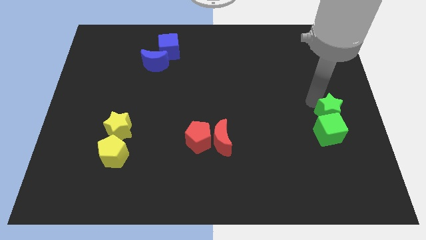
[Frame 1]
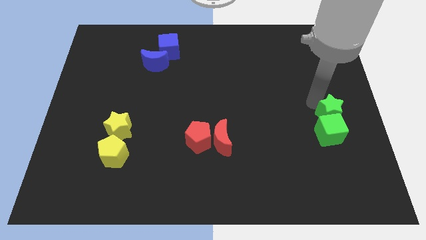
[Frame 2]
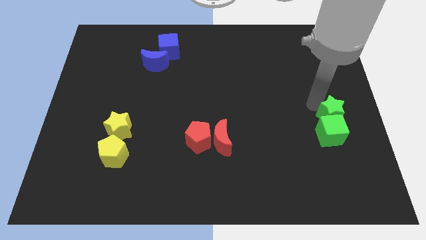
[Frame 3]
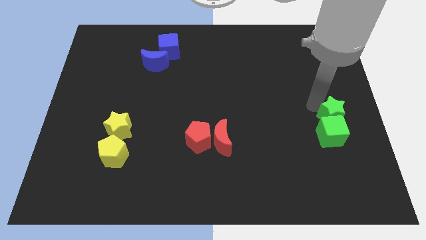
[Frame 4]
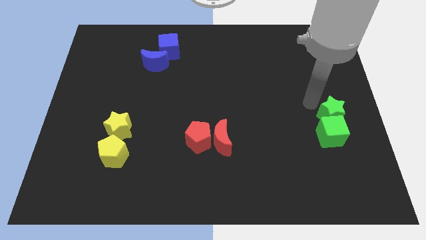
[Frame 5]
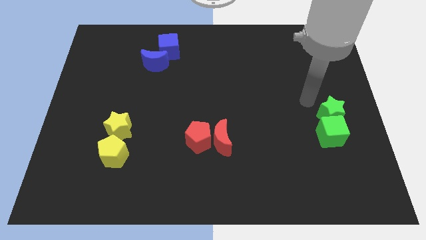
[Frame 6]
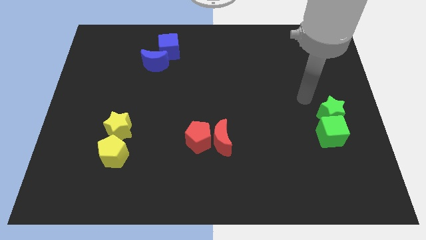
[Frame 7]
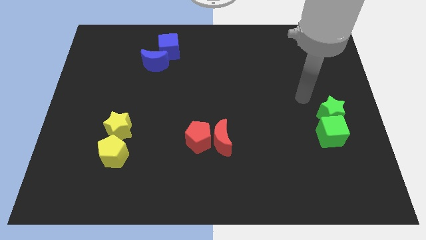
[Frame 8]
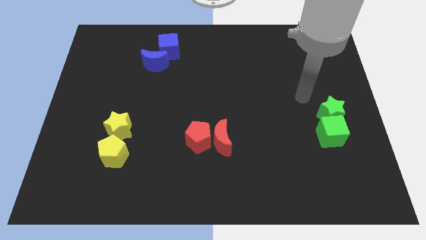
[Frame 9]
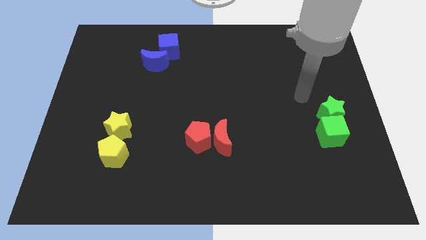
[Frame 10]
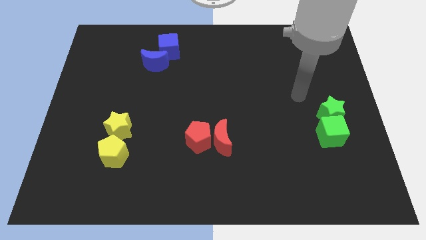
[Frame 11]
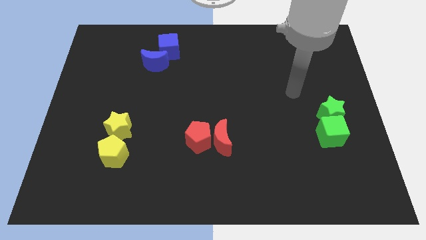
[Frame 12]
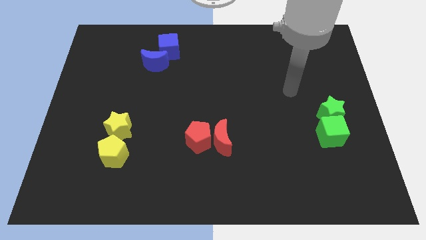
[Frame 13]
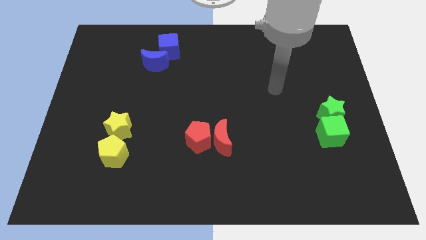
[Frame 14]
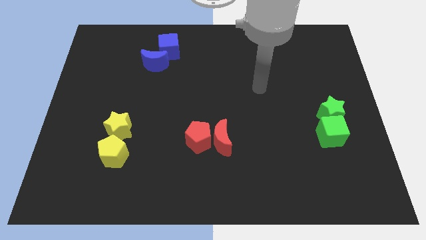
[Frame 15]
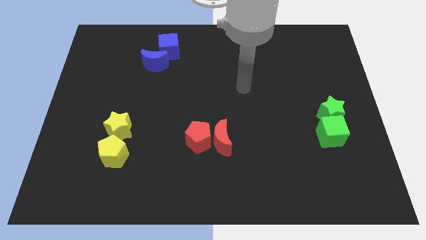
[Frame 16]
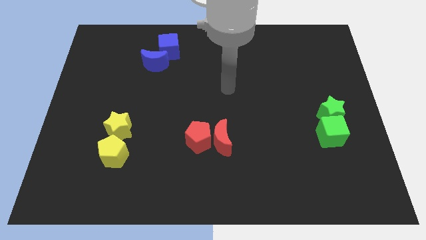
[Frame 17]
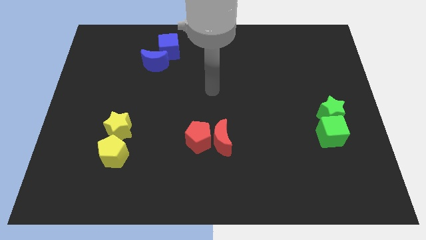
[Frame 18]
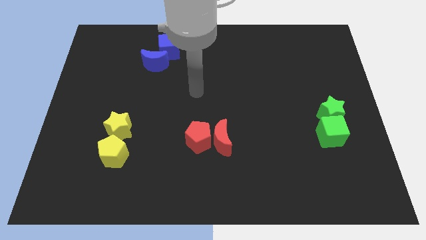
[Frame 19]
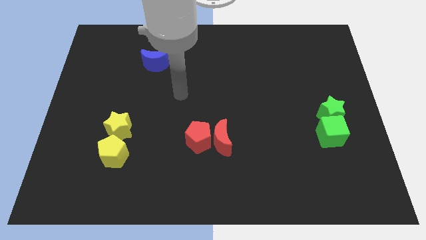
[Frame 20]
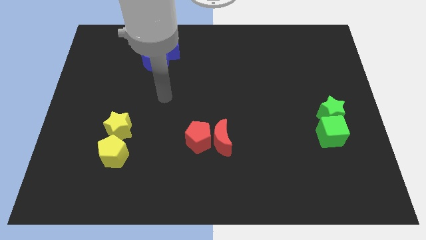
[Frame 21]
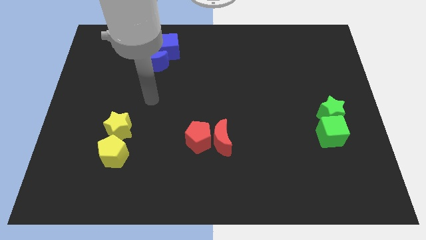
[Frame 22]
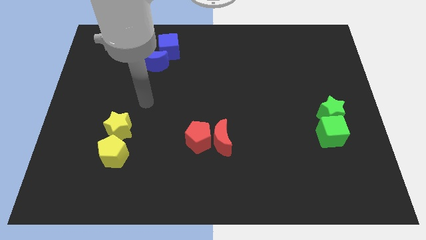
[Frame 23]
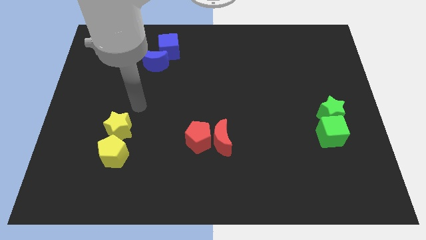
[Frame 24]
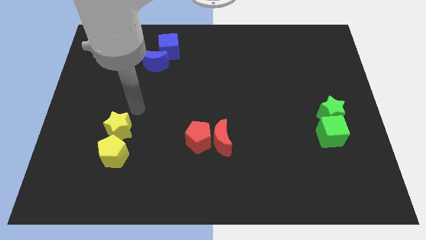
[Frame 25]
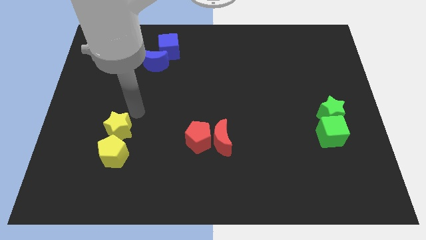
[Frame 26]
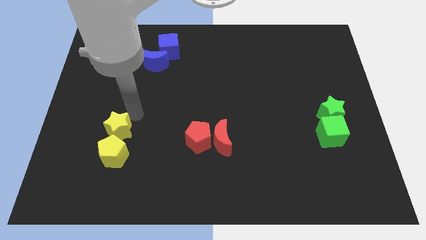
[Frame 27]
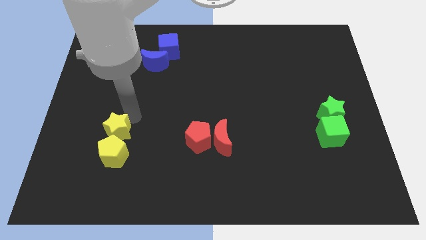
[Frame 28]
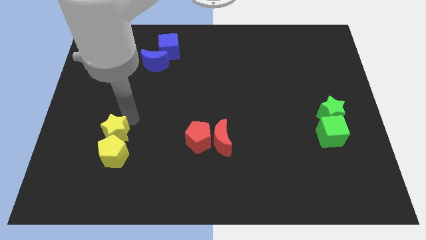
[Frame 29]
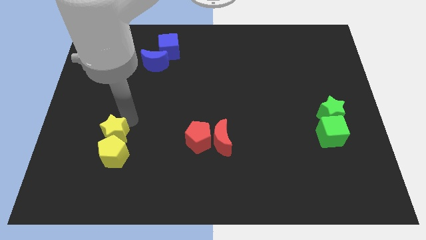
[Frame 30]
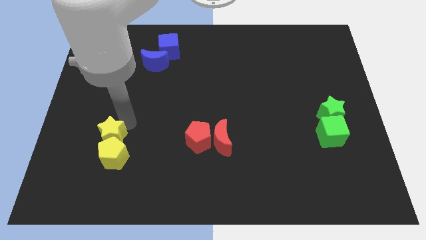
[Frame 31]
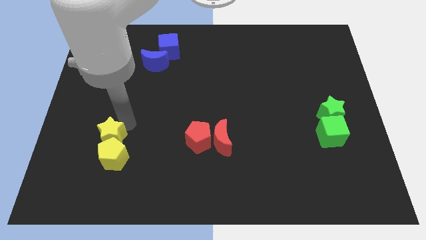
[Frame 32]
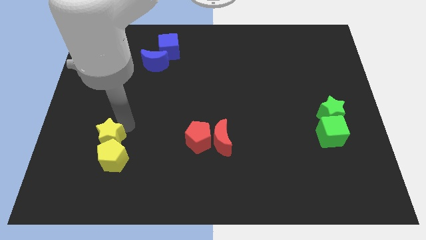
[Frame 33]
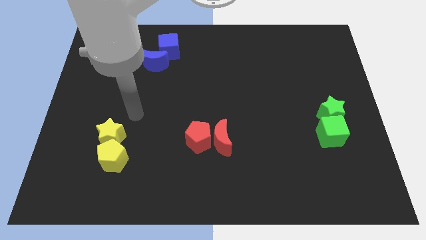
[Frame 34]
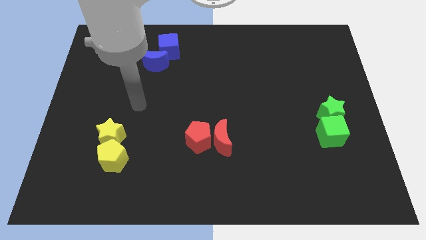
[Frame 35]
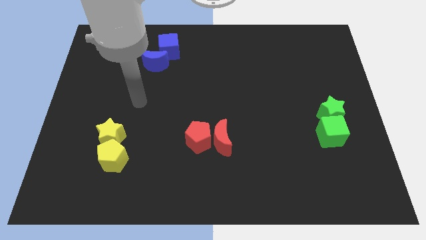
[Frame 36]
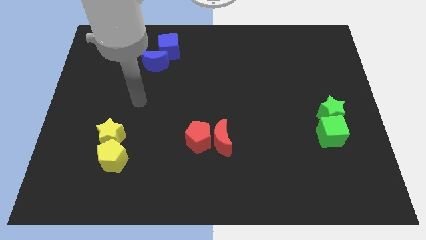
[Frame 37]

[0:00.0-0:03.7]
move yellow star into yellow pentagon

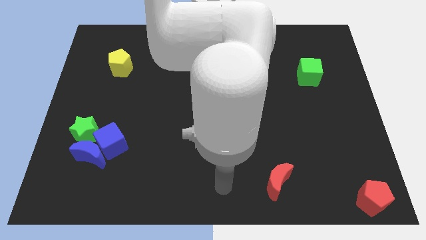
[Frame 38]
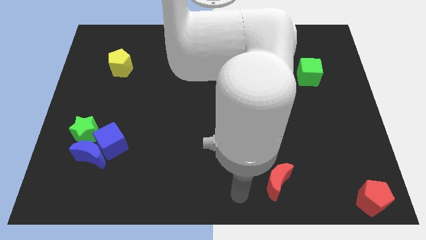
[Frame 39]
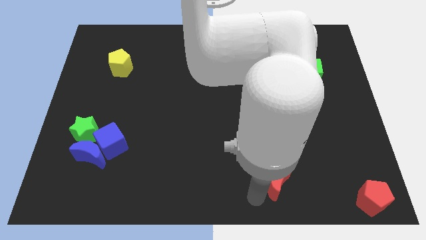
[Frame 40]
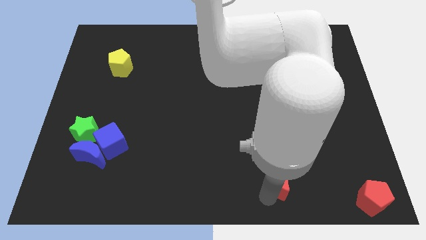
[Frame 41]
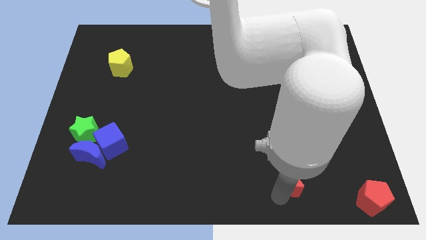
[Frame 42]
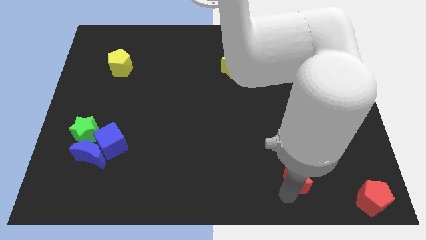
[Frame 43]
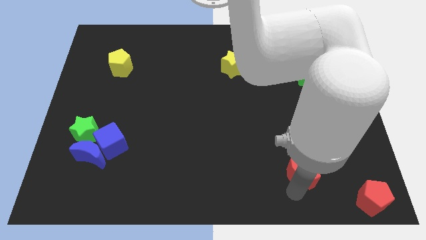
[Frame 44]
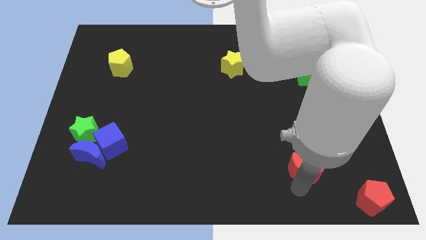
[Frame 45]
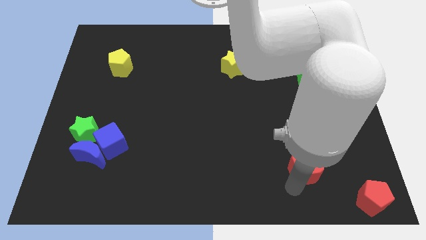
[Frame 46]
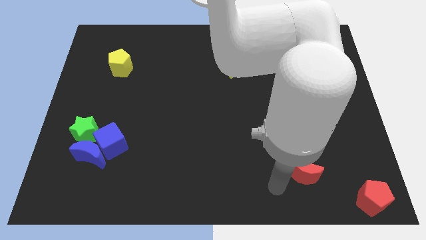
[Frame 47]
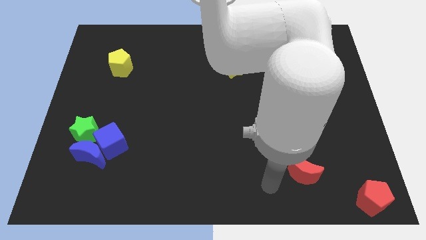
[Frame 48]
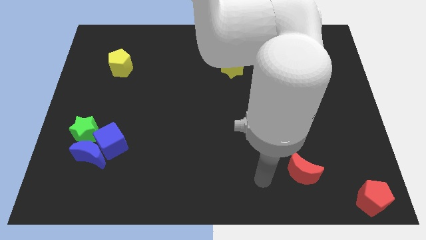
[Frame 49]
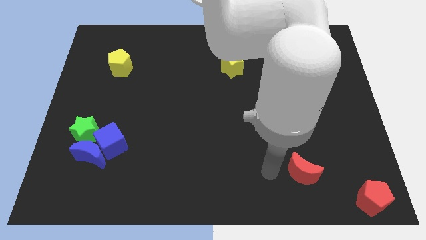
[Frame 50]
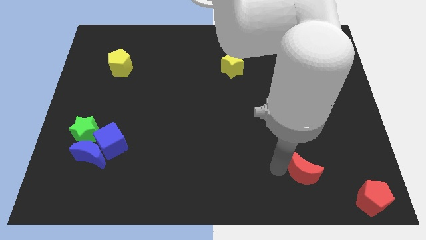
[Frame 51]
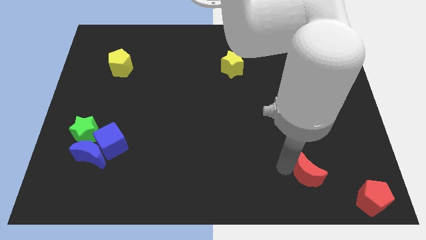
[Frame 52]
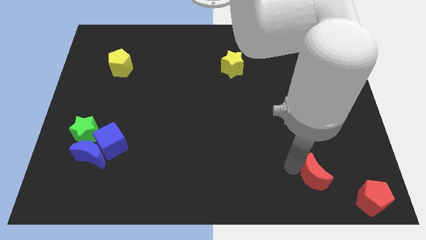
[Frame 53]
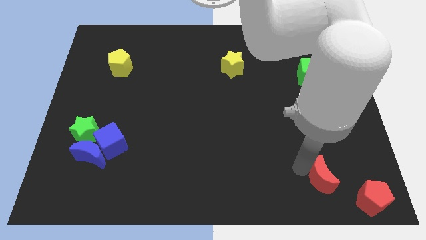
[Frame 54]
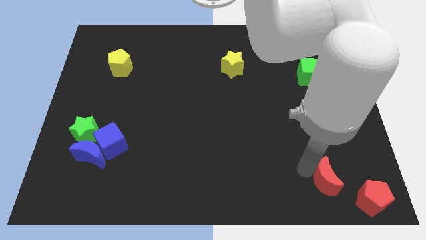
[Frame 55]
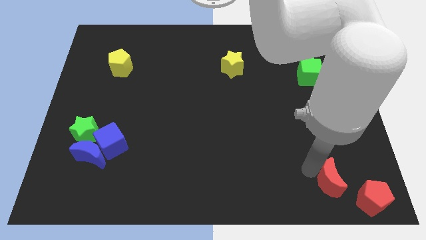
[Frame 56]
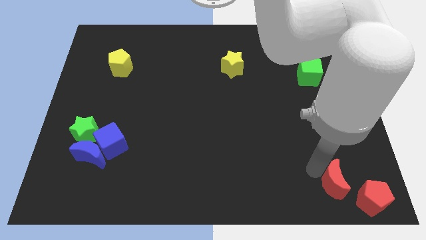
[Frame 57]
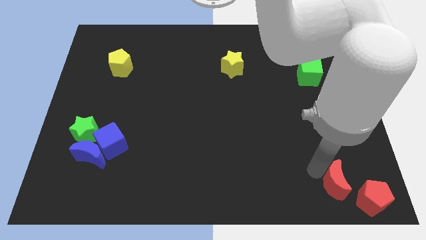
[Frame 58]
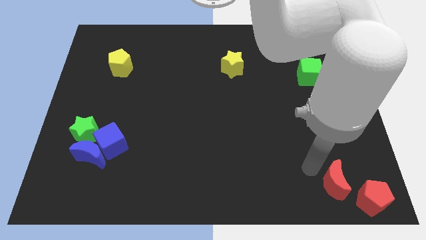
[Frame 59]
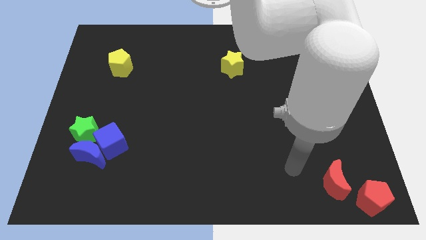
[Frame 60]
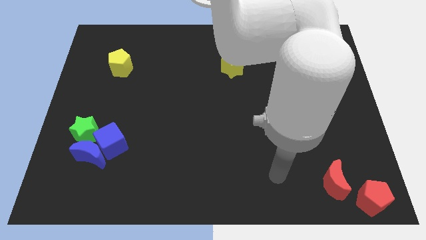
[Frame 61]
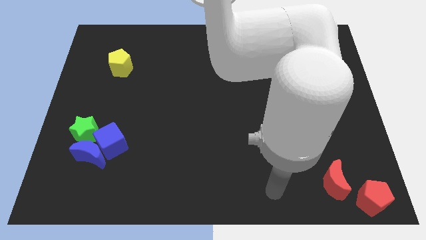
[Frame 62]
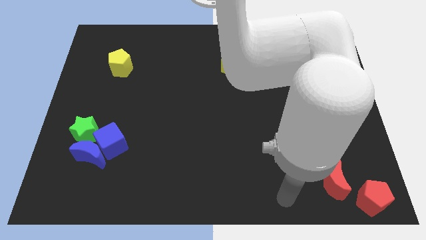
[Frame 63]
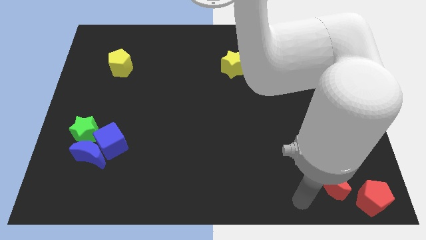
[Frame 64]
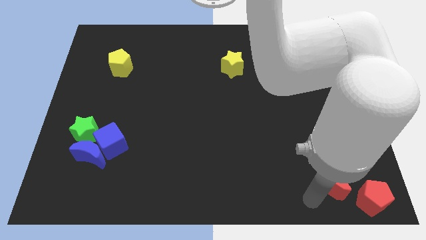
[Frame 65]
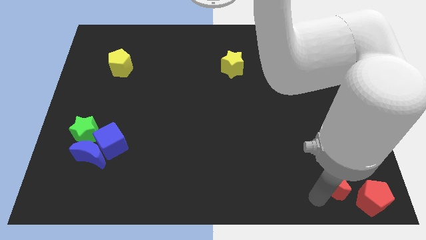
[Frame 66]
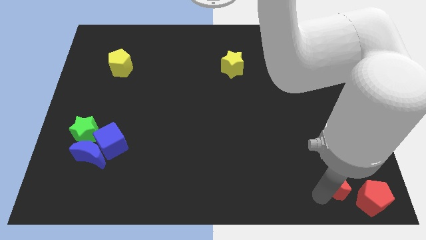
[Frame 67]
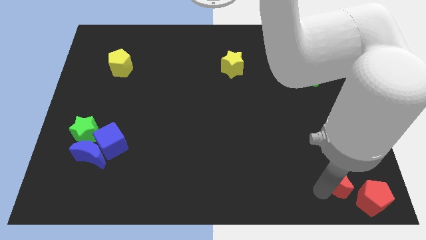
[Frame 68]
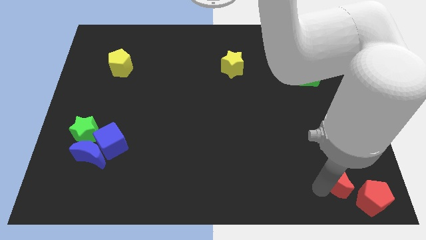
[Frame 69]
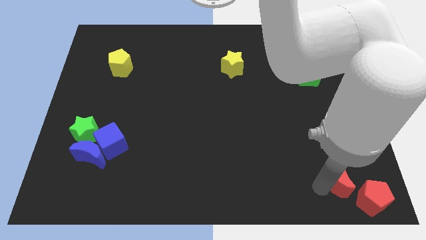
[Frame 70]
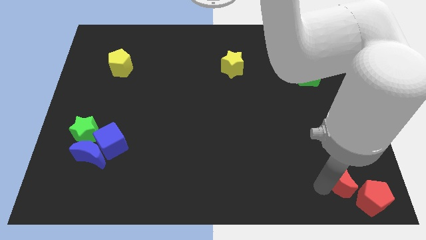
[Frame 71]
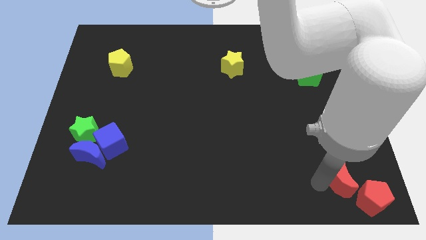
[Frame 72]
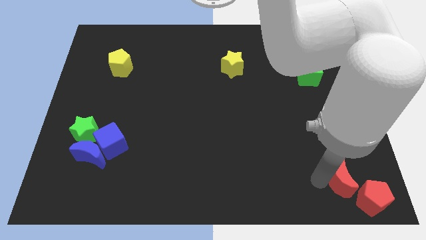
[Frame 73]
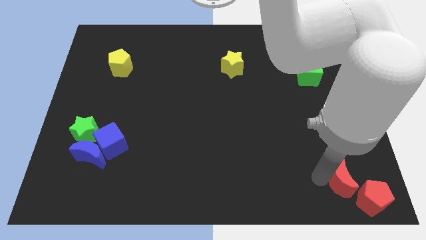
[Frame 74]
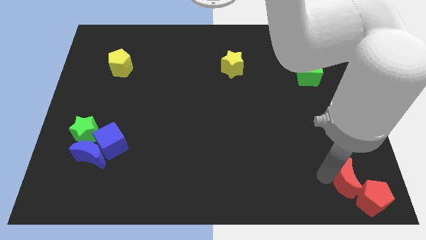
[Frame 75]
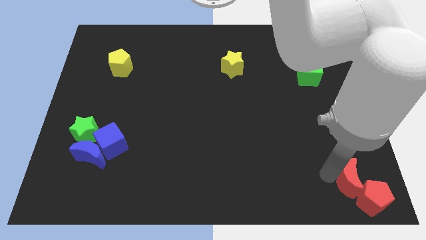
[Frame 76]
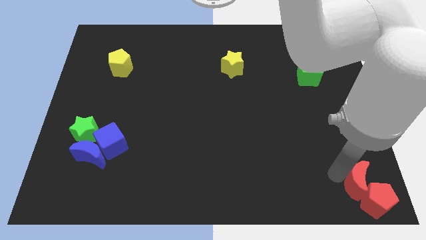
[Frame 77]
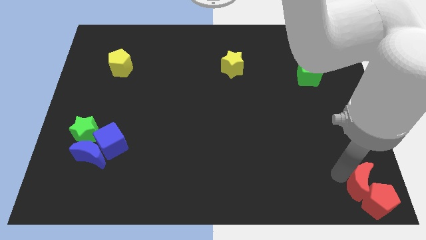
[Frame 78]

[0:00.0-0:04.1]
push red moon into red pentagon

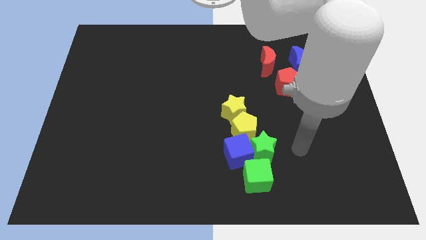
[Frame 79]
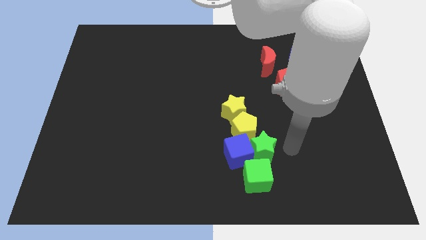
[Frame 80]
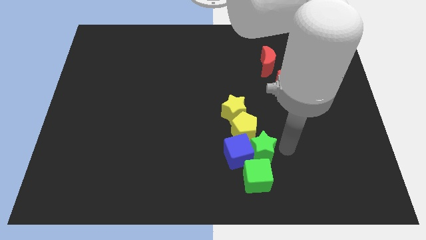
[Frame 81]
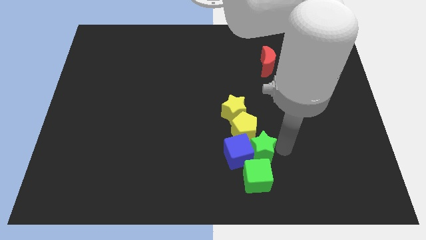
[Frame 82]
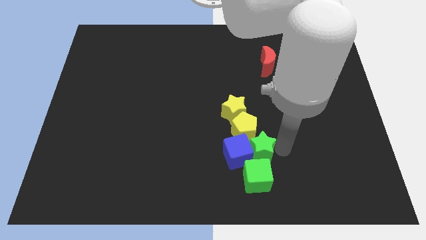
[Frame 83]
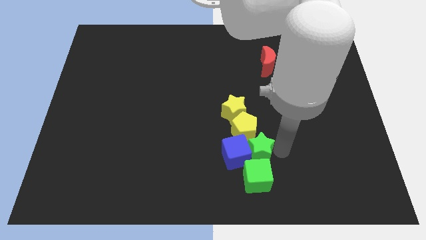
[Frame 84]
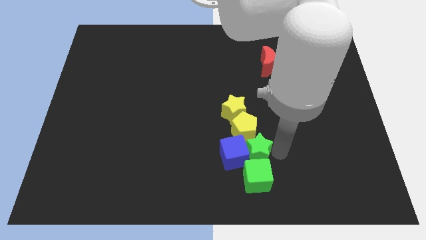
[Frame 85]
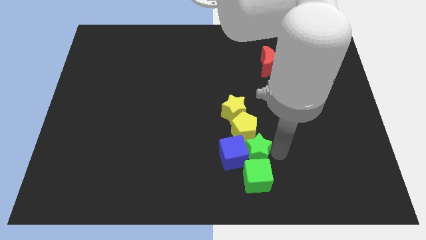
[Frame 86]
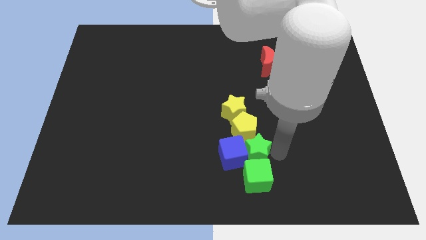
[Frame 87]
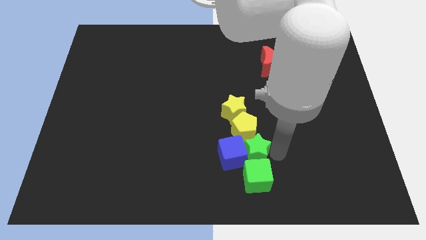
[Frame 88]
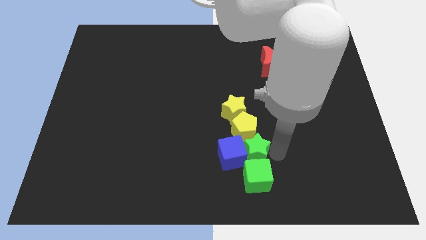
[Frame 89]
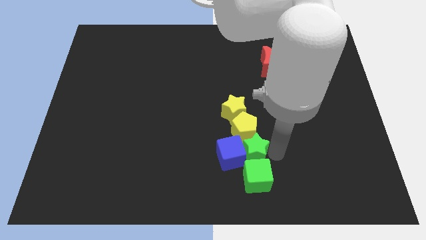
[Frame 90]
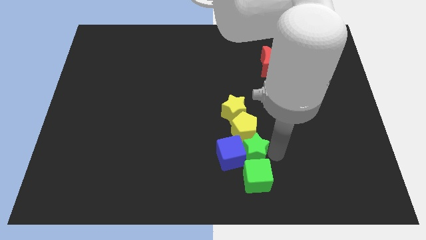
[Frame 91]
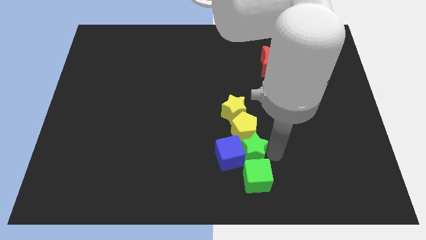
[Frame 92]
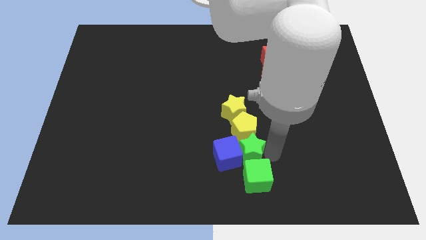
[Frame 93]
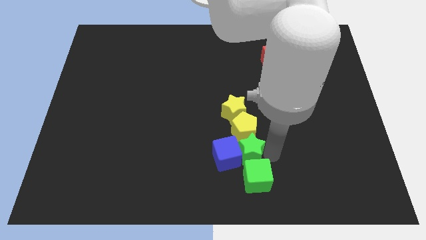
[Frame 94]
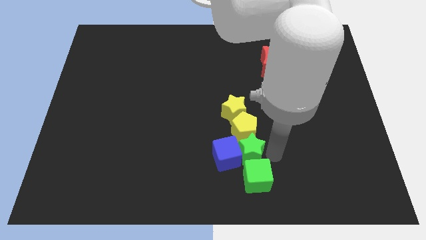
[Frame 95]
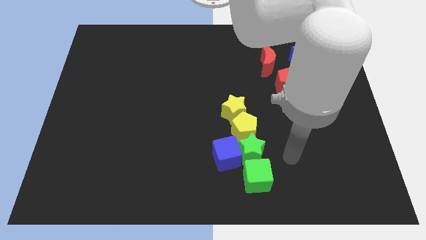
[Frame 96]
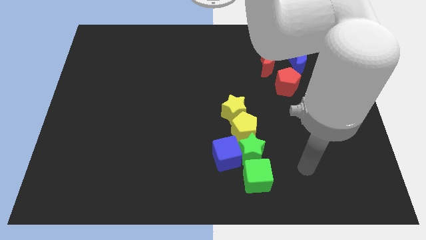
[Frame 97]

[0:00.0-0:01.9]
place green star to the bottom of the yellow pentagon
